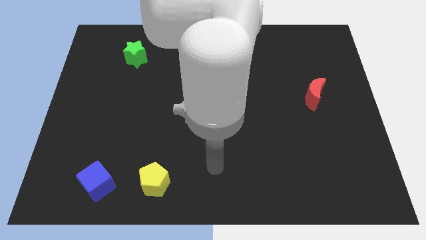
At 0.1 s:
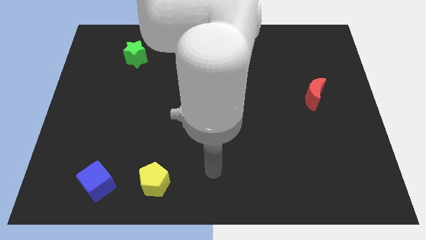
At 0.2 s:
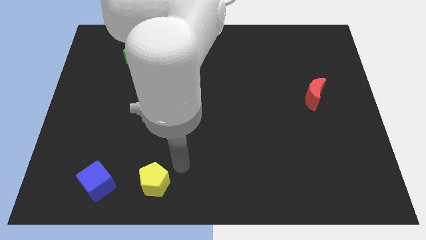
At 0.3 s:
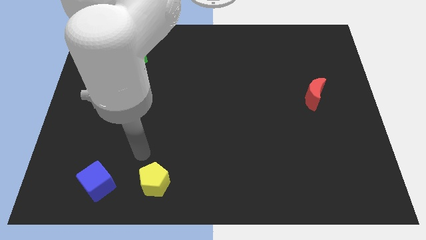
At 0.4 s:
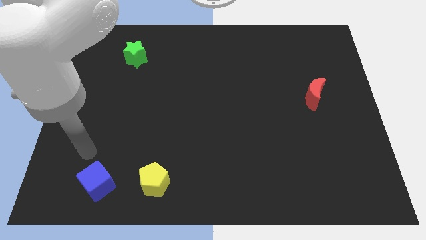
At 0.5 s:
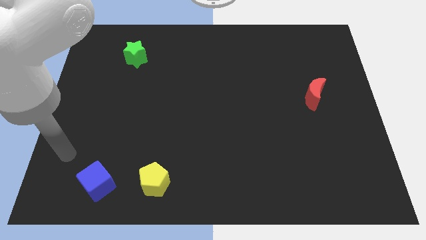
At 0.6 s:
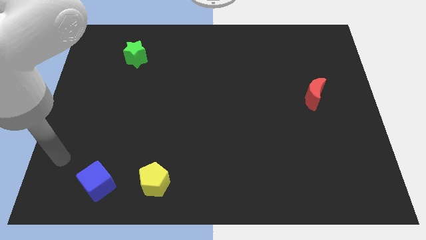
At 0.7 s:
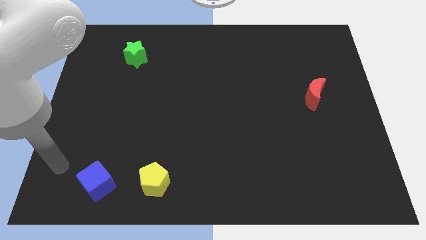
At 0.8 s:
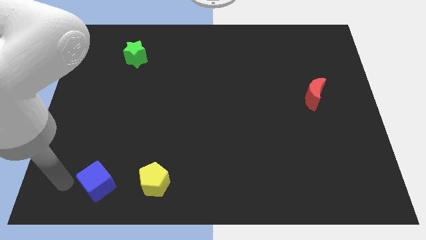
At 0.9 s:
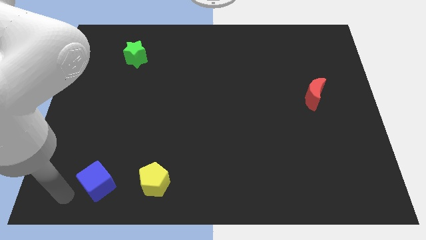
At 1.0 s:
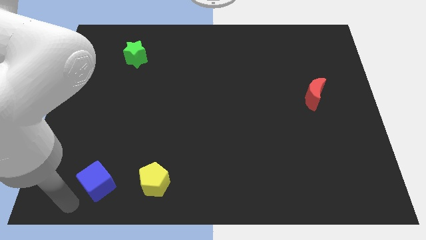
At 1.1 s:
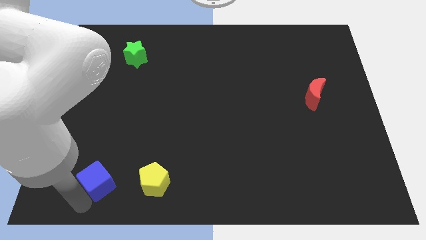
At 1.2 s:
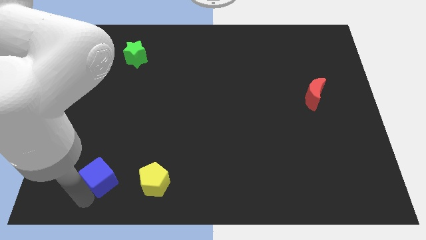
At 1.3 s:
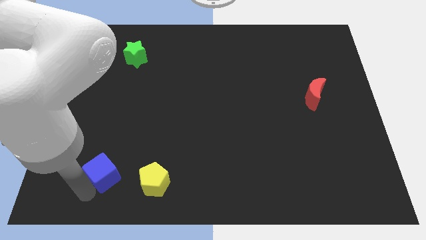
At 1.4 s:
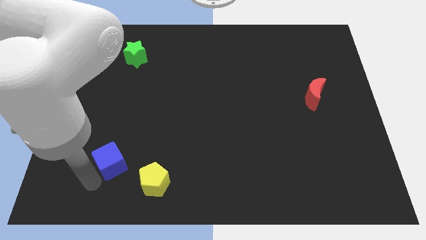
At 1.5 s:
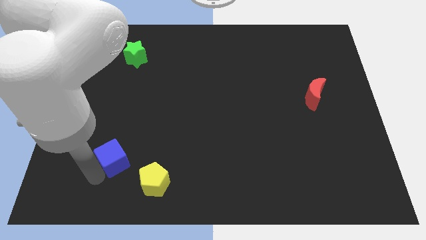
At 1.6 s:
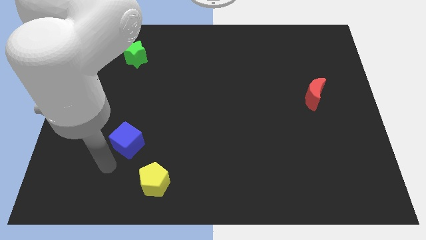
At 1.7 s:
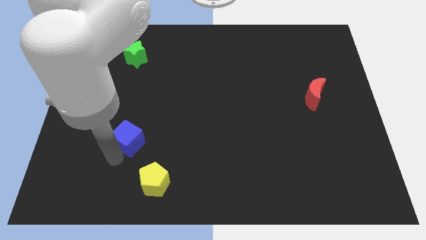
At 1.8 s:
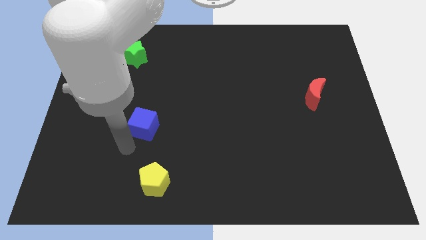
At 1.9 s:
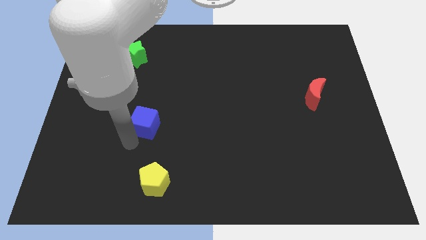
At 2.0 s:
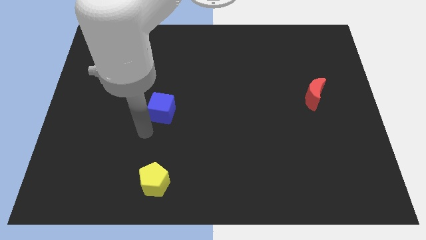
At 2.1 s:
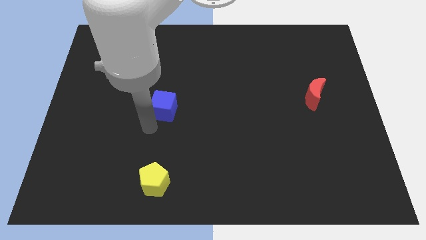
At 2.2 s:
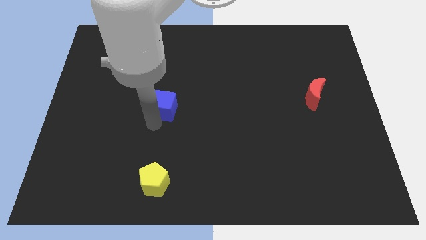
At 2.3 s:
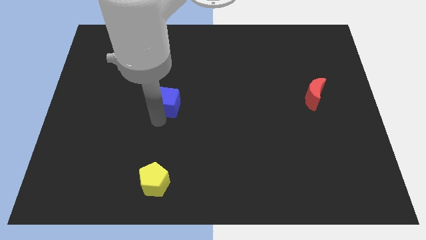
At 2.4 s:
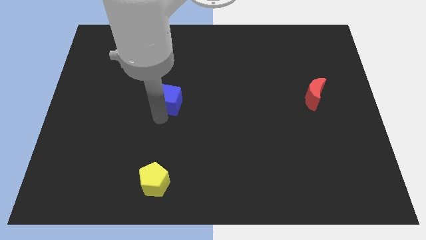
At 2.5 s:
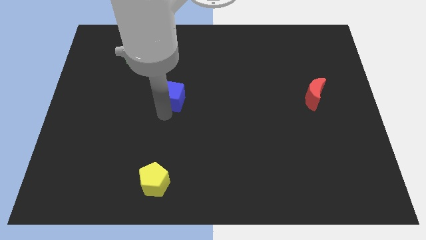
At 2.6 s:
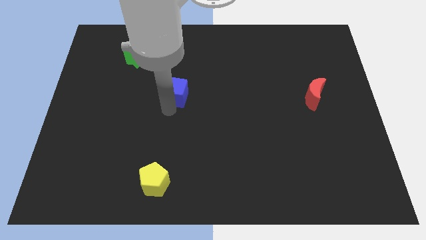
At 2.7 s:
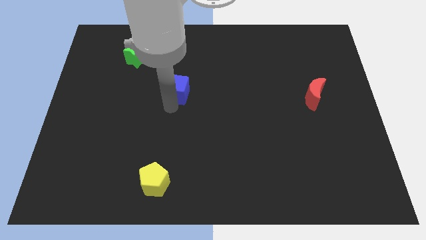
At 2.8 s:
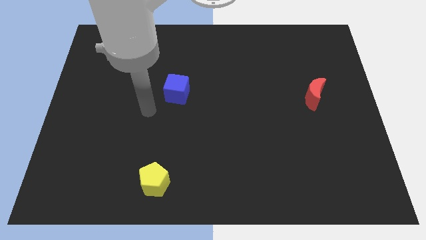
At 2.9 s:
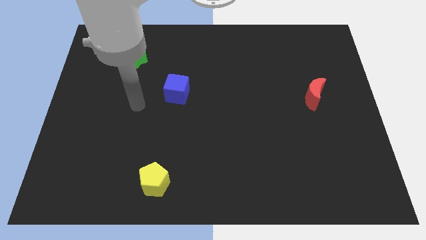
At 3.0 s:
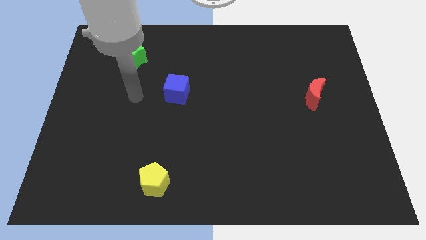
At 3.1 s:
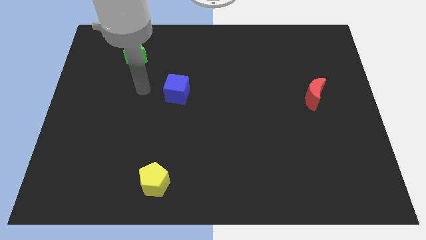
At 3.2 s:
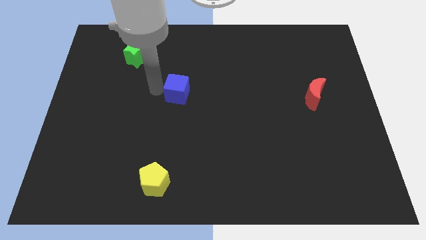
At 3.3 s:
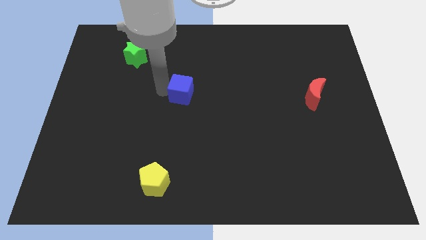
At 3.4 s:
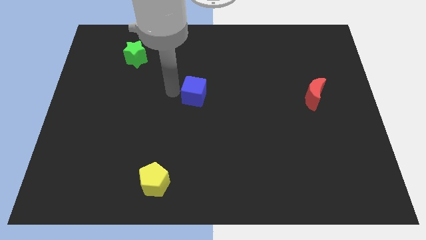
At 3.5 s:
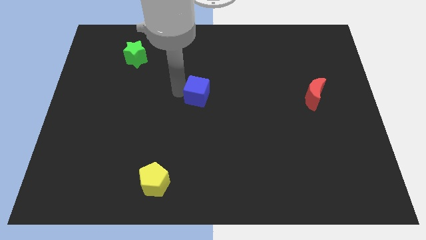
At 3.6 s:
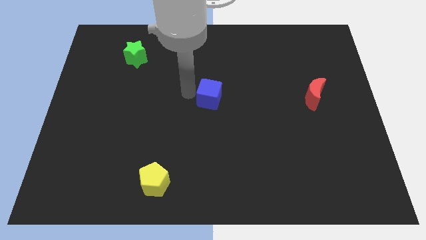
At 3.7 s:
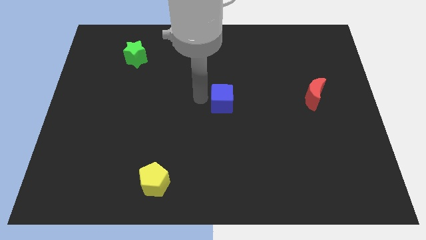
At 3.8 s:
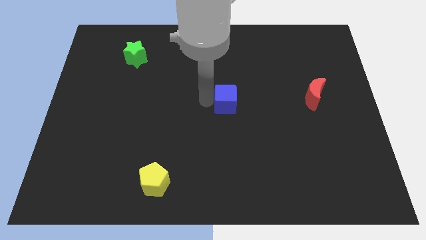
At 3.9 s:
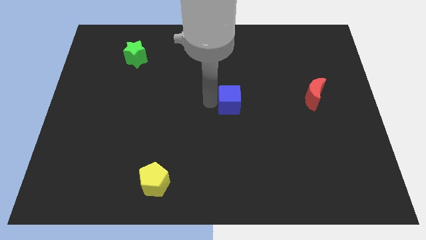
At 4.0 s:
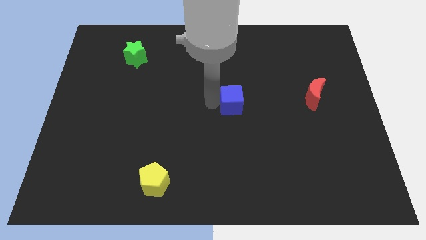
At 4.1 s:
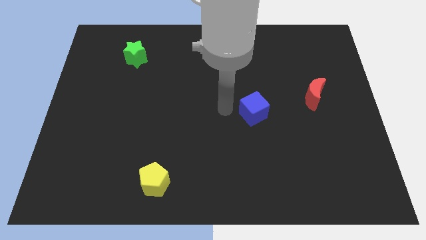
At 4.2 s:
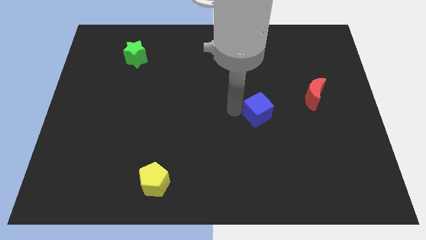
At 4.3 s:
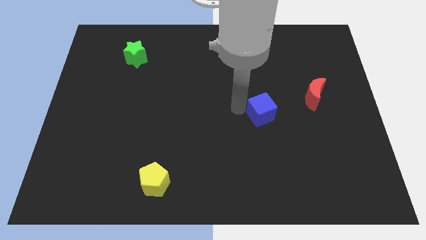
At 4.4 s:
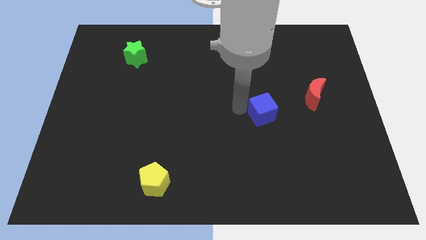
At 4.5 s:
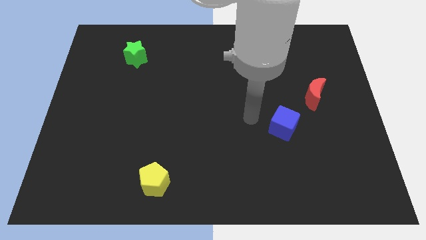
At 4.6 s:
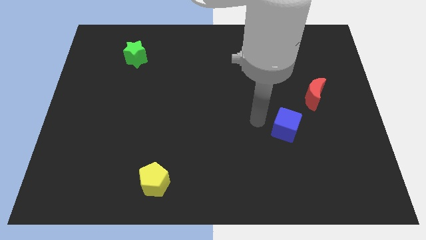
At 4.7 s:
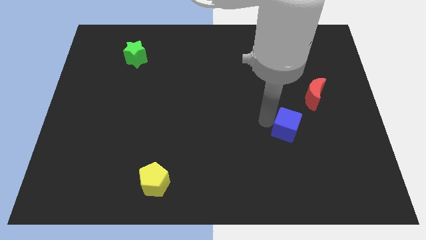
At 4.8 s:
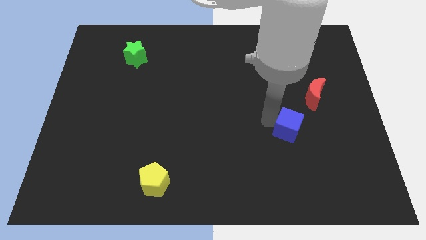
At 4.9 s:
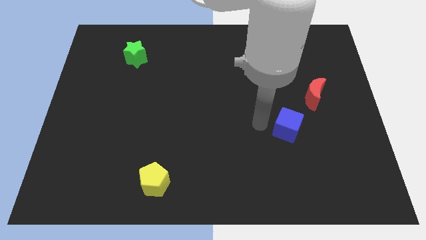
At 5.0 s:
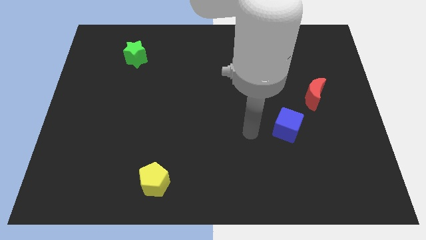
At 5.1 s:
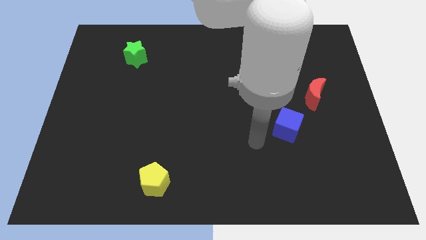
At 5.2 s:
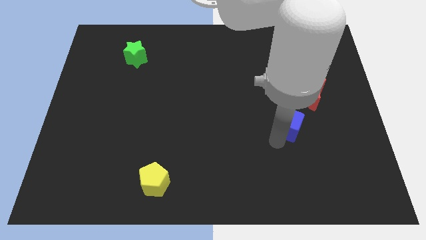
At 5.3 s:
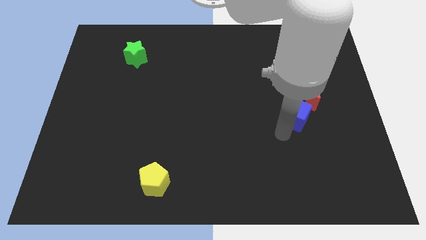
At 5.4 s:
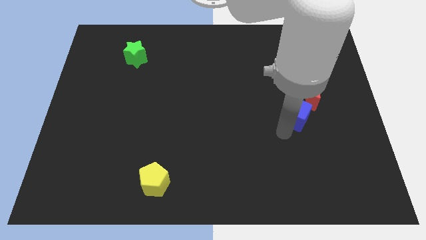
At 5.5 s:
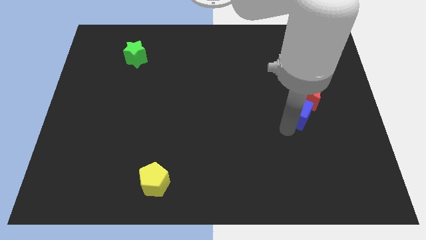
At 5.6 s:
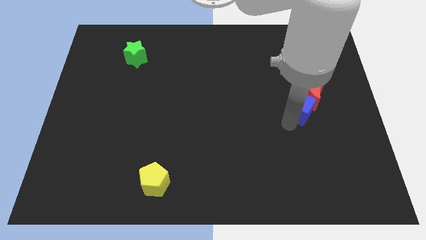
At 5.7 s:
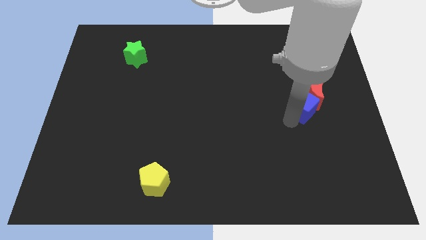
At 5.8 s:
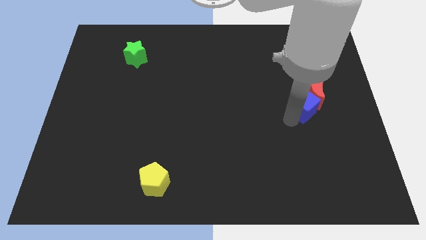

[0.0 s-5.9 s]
push the blue block to the moon

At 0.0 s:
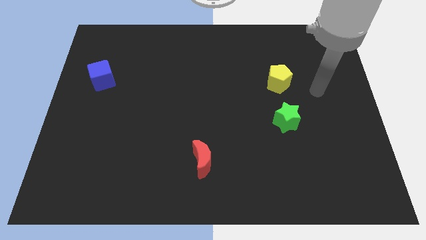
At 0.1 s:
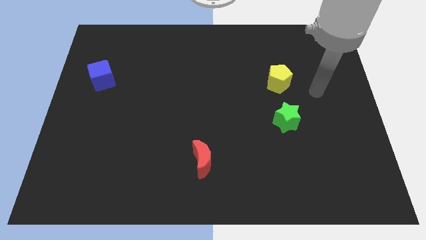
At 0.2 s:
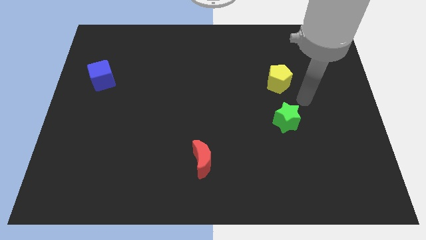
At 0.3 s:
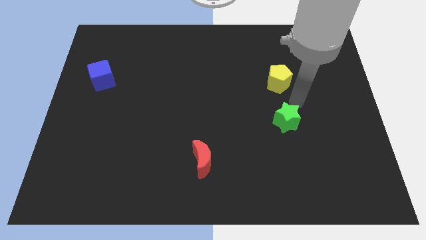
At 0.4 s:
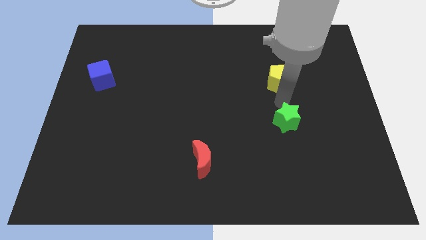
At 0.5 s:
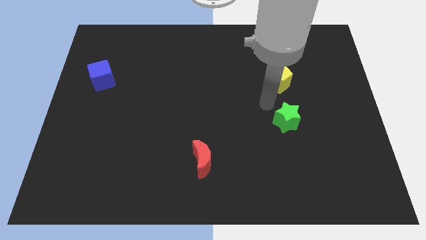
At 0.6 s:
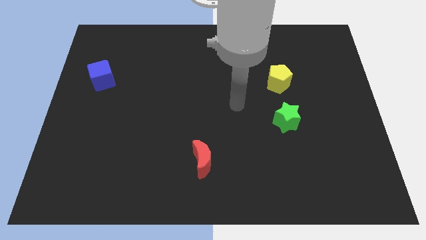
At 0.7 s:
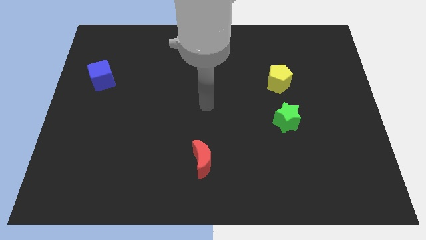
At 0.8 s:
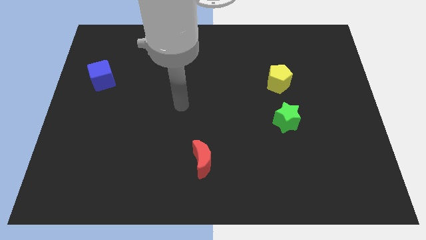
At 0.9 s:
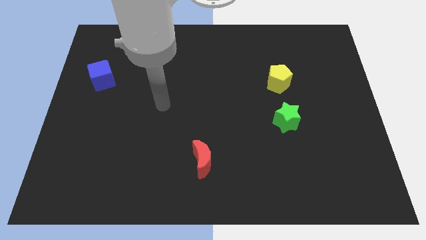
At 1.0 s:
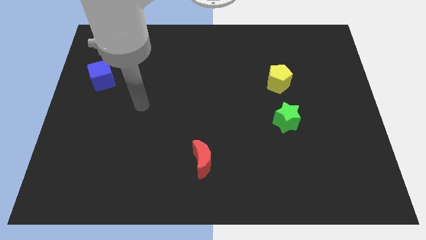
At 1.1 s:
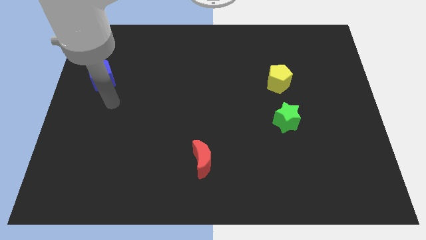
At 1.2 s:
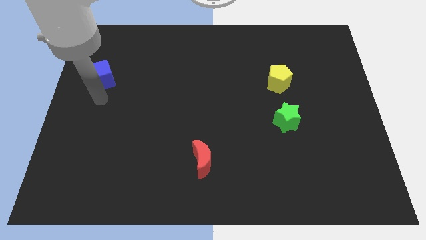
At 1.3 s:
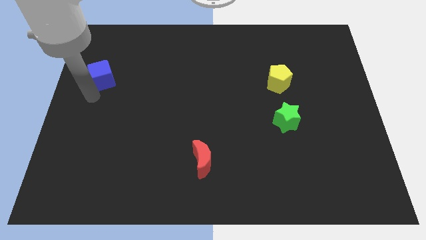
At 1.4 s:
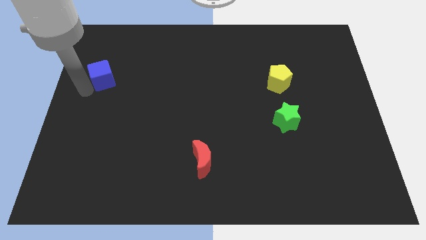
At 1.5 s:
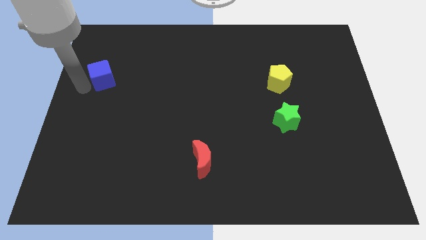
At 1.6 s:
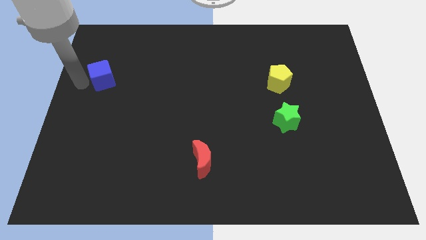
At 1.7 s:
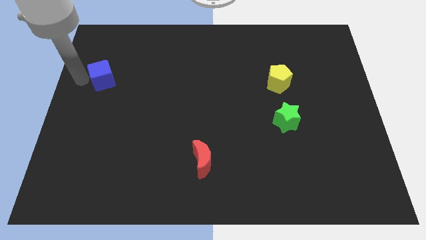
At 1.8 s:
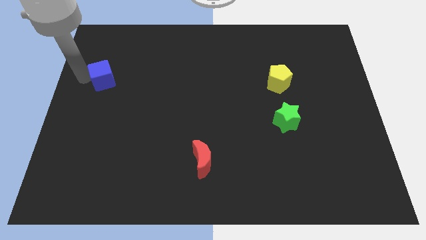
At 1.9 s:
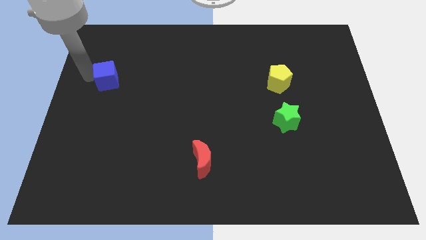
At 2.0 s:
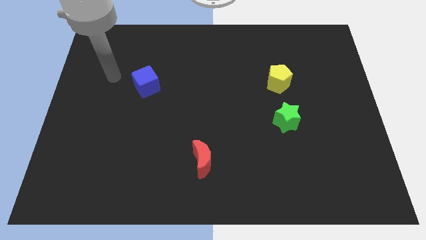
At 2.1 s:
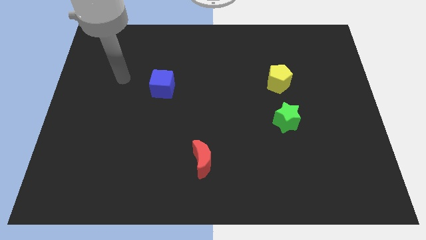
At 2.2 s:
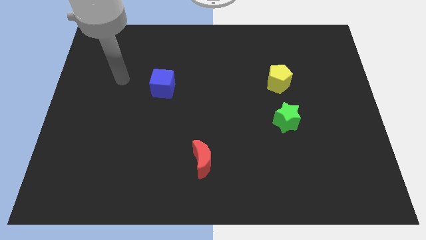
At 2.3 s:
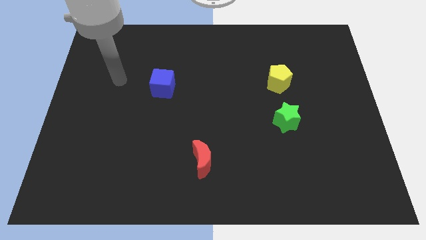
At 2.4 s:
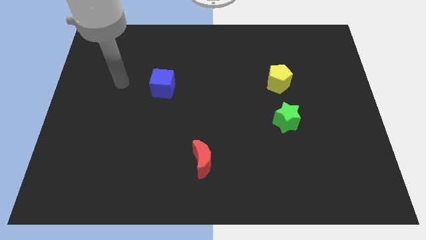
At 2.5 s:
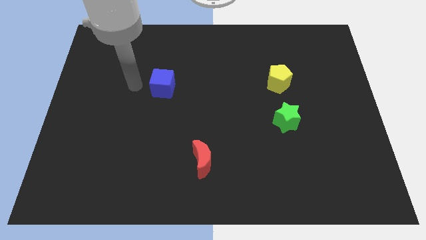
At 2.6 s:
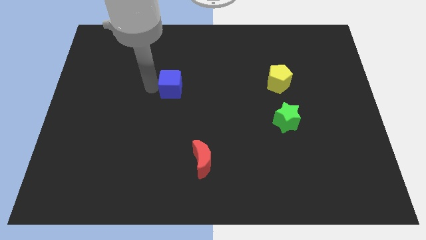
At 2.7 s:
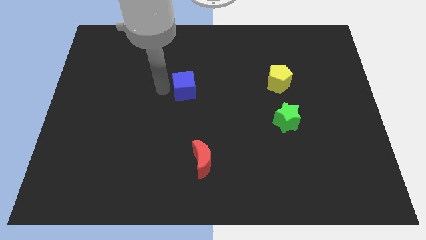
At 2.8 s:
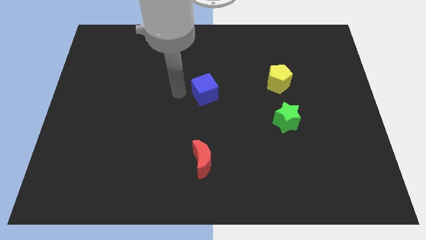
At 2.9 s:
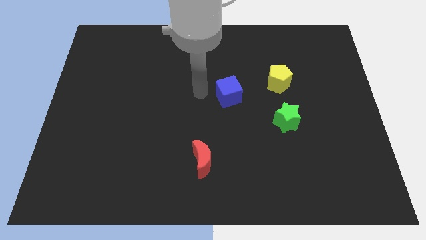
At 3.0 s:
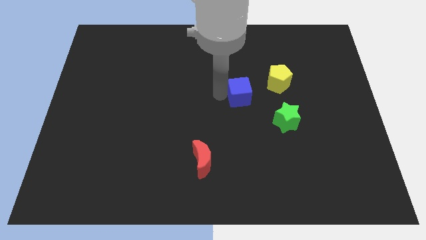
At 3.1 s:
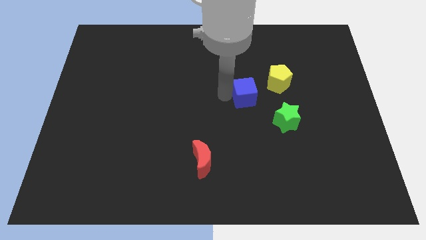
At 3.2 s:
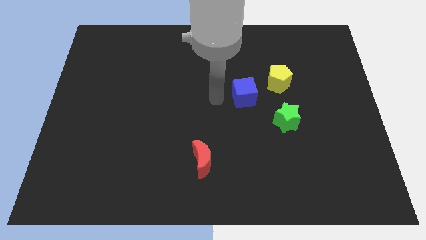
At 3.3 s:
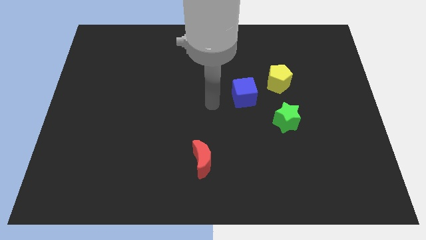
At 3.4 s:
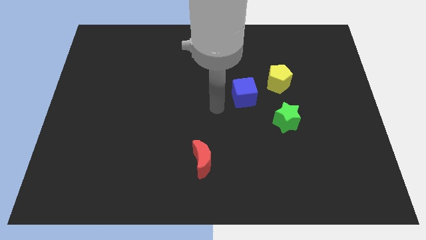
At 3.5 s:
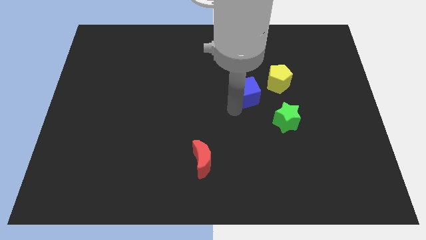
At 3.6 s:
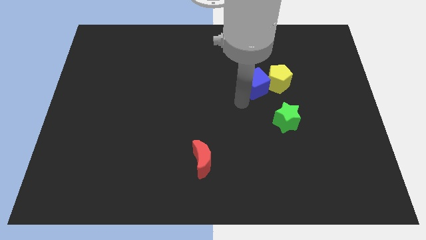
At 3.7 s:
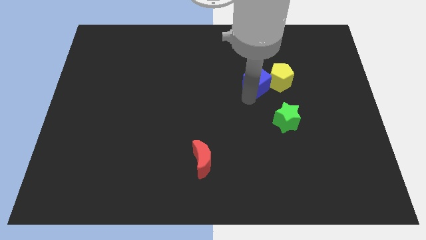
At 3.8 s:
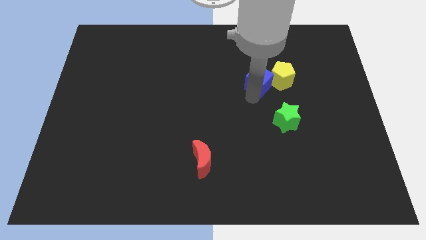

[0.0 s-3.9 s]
push the blue cube towards the pentagon
